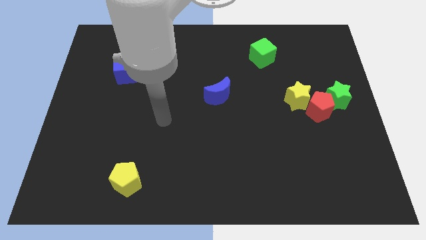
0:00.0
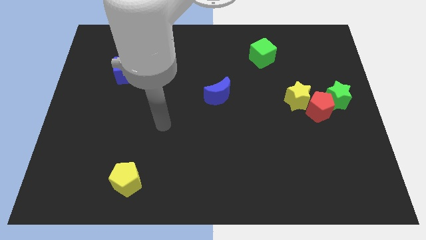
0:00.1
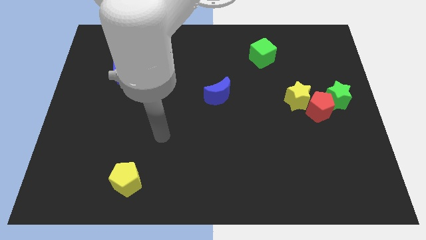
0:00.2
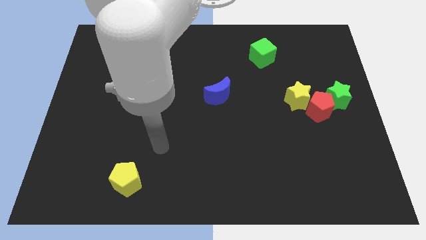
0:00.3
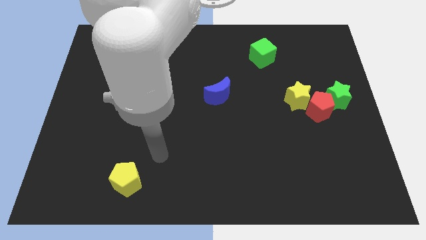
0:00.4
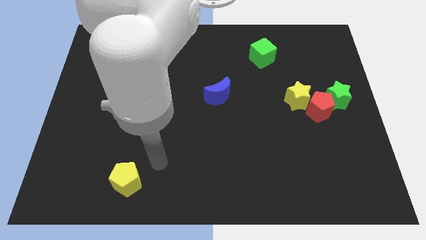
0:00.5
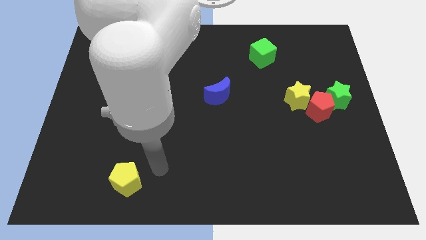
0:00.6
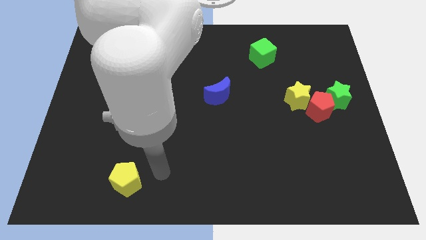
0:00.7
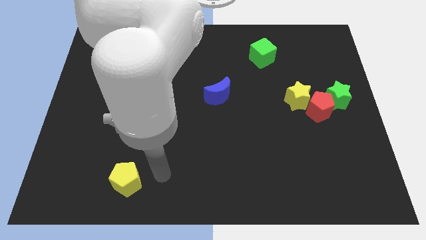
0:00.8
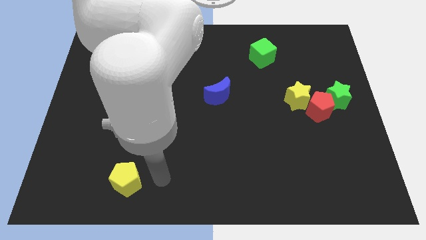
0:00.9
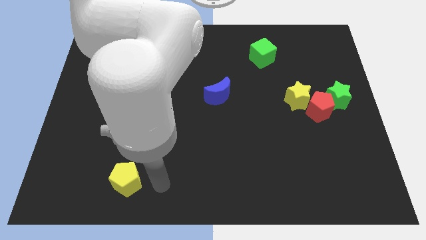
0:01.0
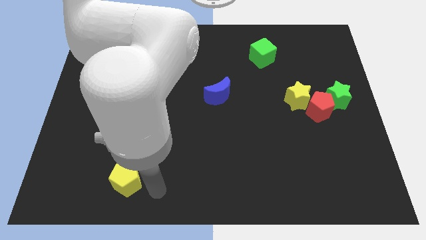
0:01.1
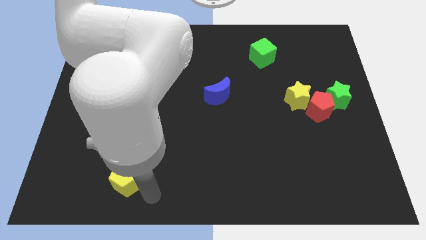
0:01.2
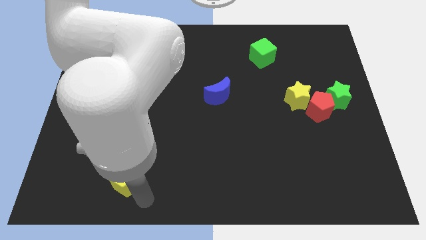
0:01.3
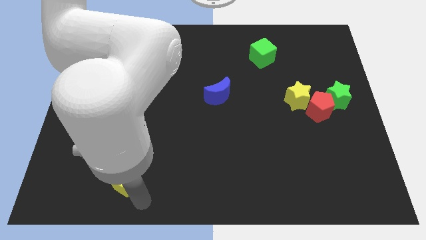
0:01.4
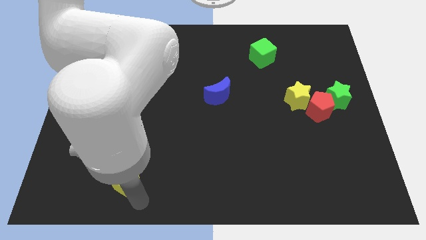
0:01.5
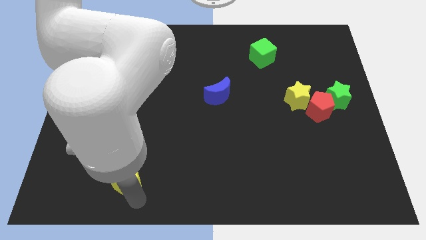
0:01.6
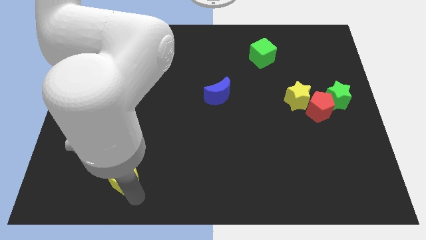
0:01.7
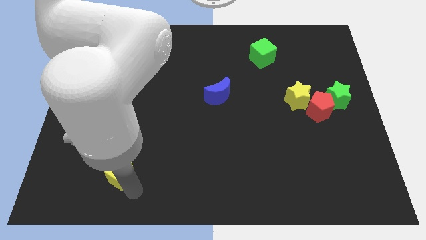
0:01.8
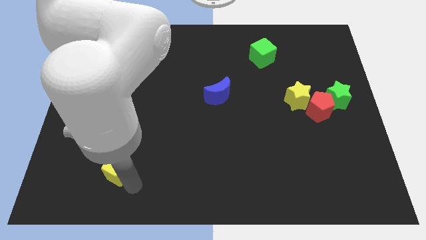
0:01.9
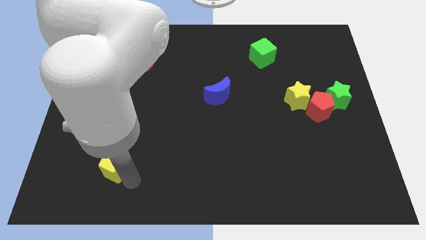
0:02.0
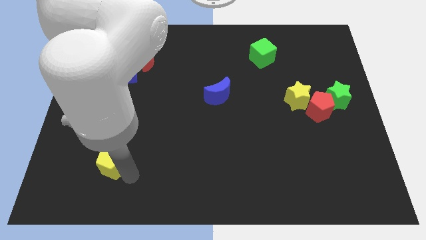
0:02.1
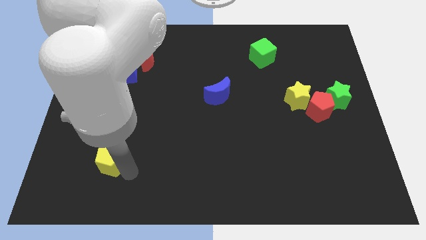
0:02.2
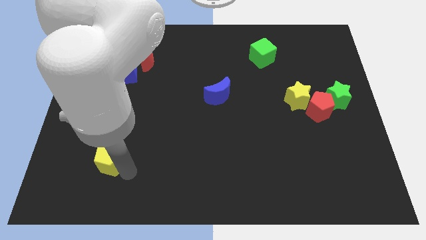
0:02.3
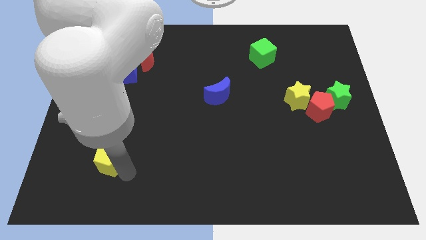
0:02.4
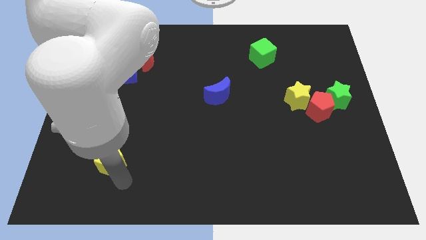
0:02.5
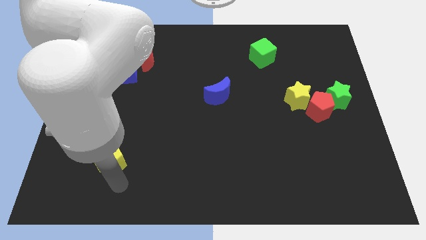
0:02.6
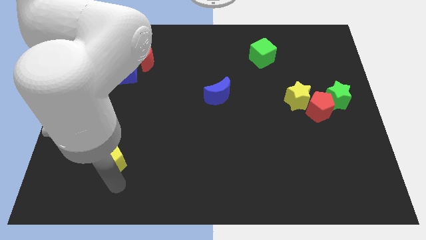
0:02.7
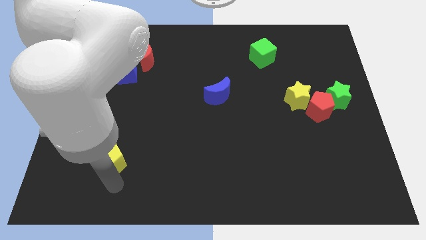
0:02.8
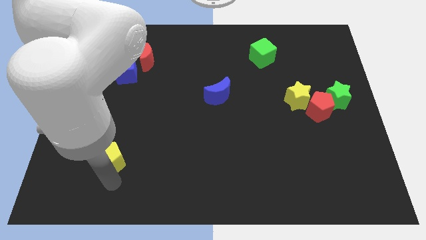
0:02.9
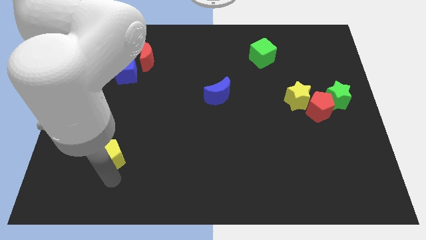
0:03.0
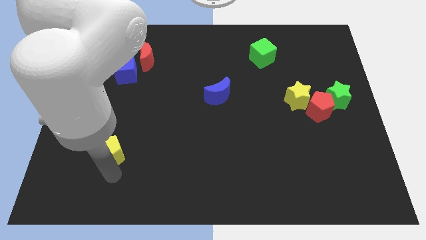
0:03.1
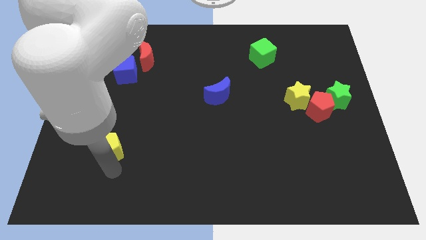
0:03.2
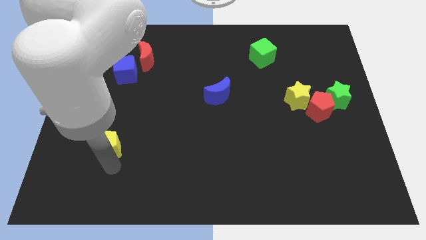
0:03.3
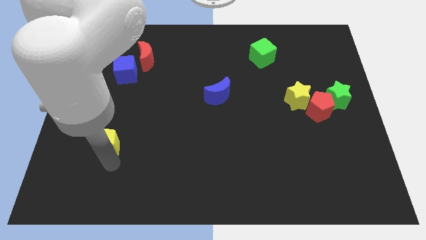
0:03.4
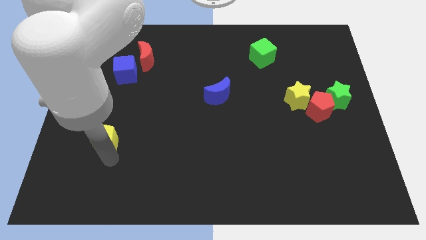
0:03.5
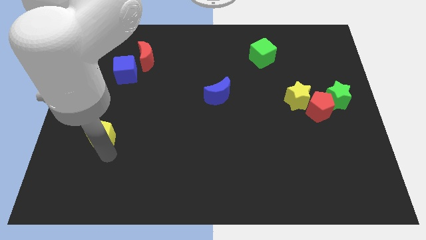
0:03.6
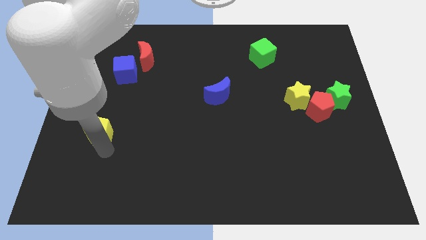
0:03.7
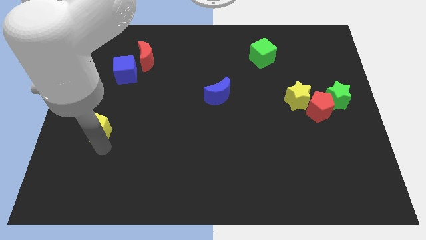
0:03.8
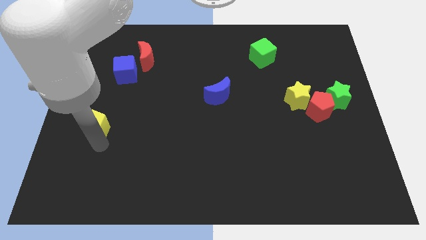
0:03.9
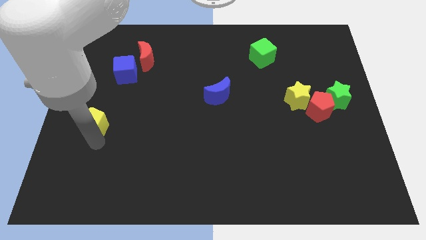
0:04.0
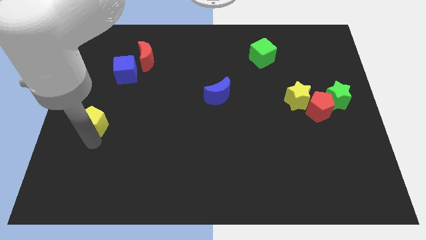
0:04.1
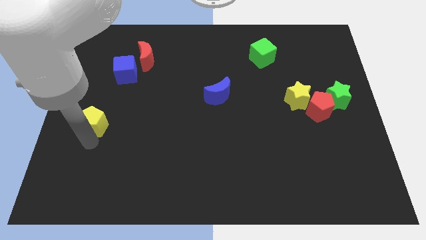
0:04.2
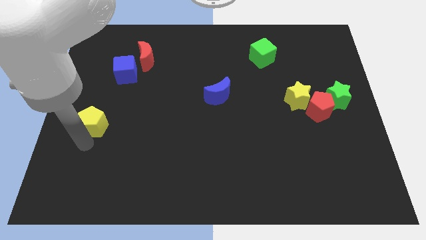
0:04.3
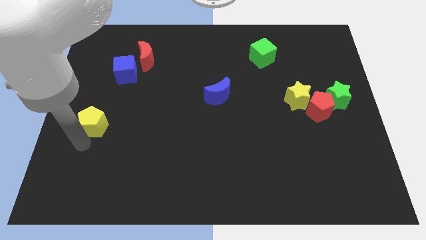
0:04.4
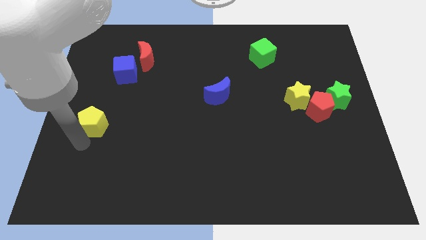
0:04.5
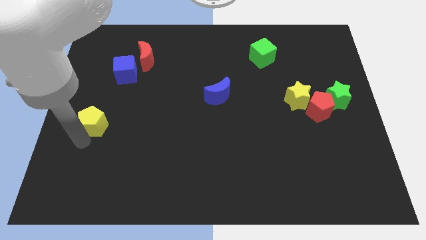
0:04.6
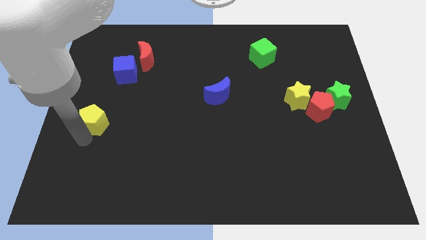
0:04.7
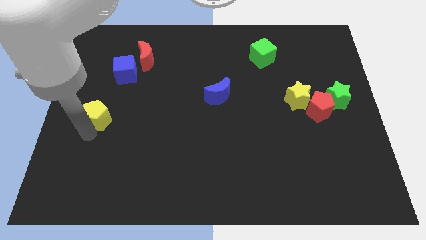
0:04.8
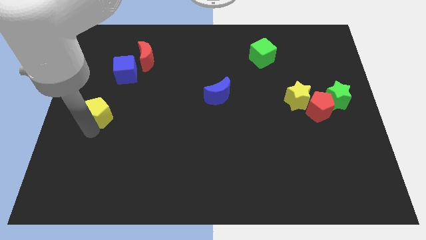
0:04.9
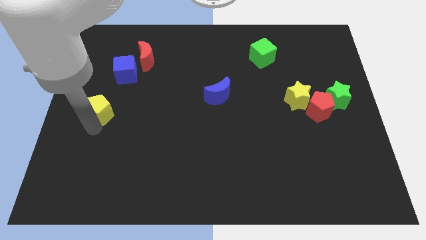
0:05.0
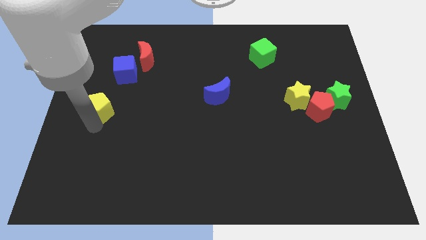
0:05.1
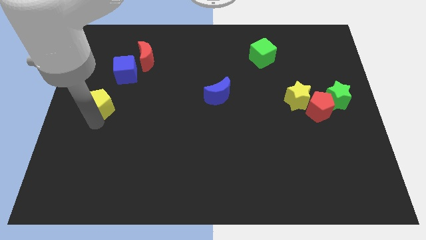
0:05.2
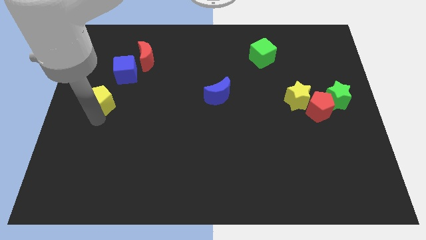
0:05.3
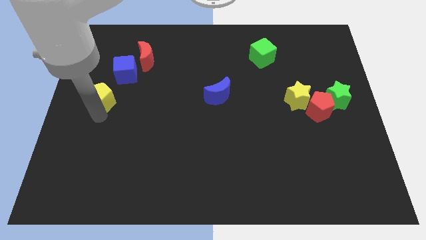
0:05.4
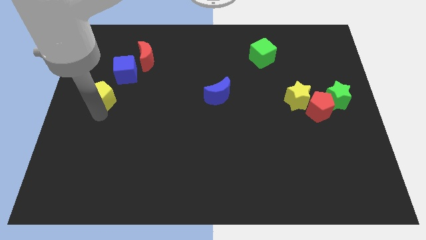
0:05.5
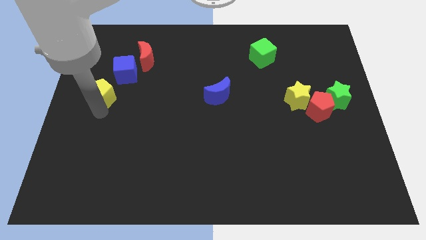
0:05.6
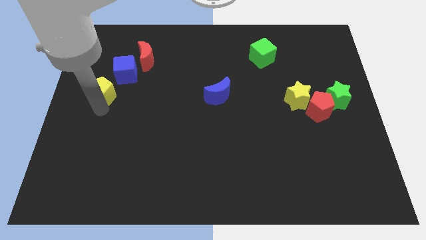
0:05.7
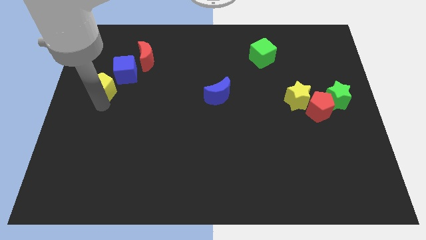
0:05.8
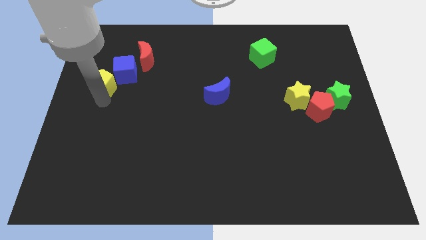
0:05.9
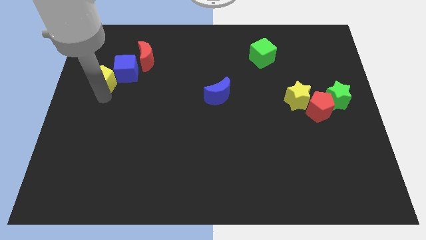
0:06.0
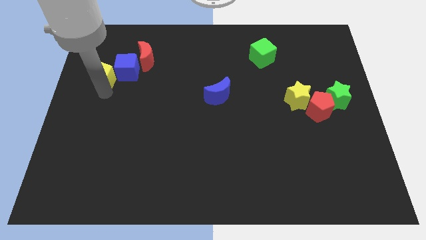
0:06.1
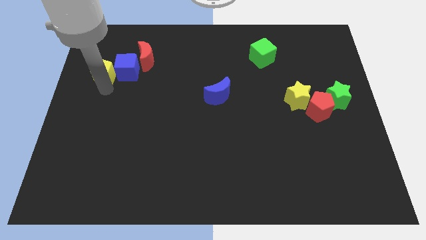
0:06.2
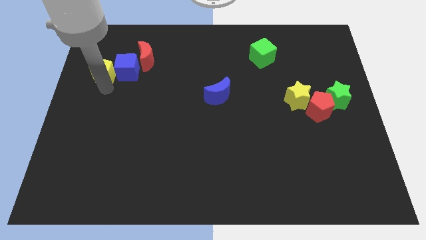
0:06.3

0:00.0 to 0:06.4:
put the yellow pentagon close to the blue cube

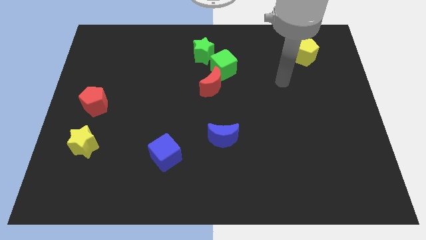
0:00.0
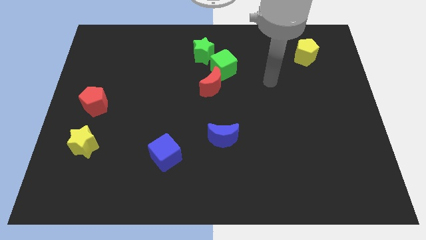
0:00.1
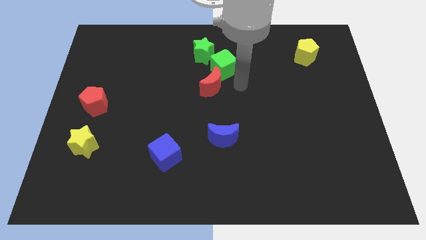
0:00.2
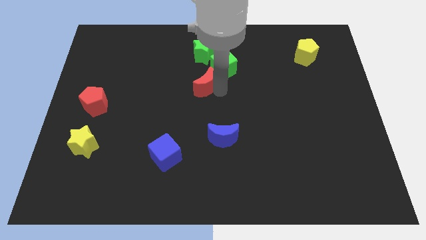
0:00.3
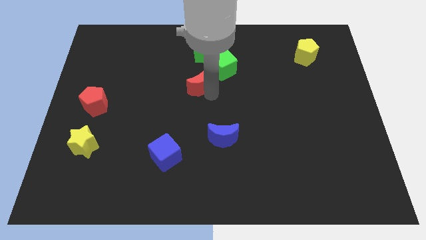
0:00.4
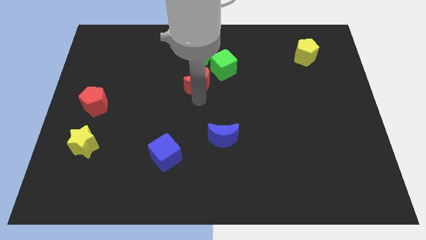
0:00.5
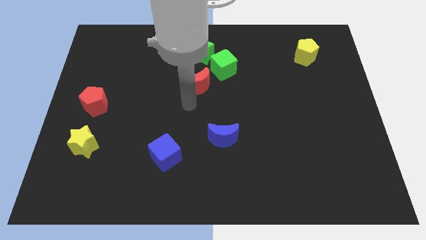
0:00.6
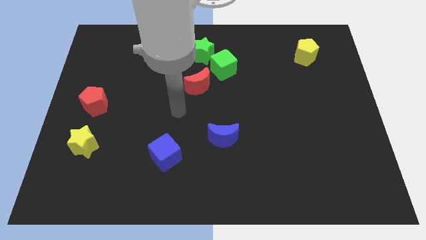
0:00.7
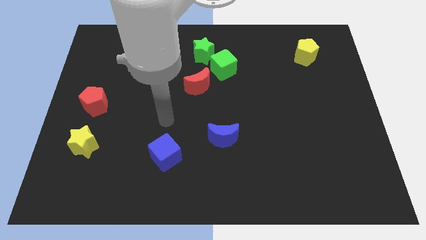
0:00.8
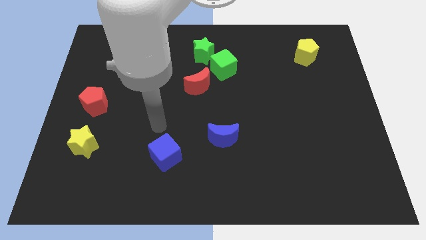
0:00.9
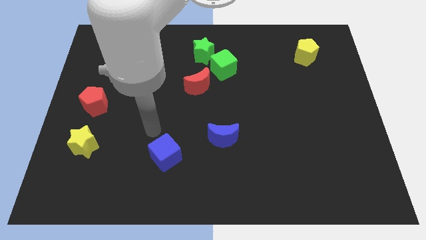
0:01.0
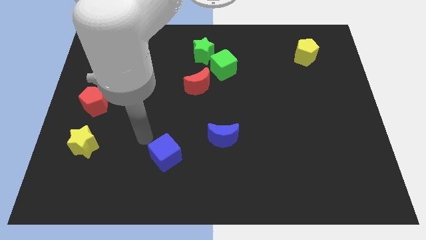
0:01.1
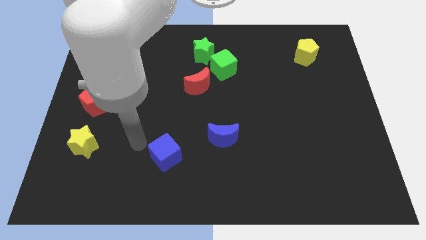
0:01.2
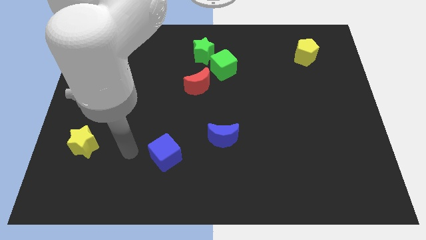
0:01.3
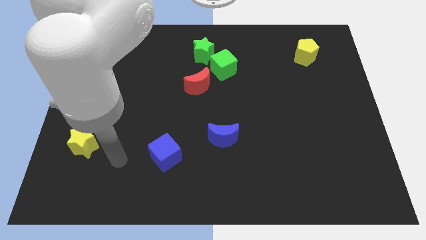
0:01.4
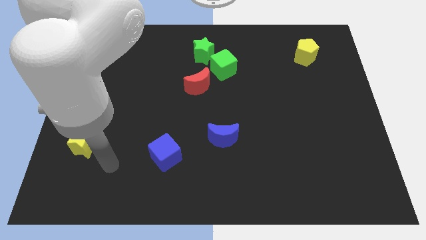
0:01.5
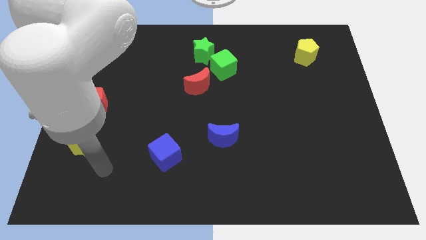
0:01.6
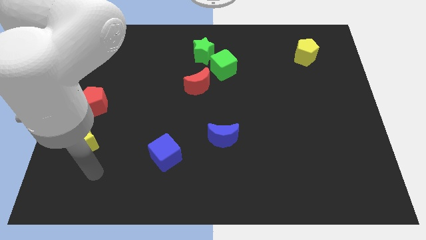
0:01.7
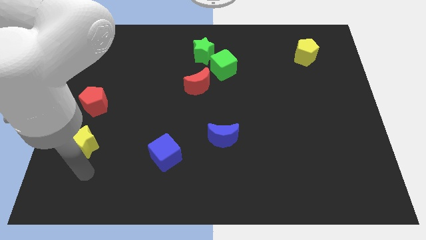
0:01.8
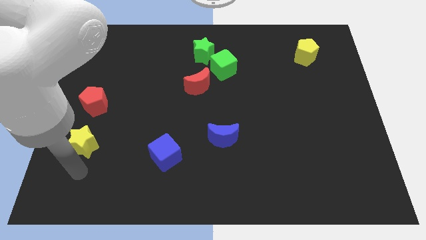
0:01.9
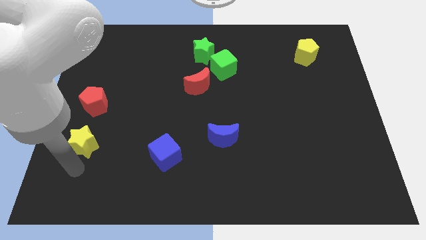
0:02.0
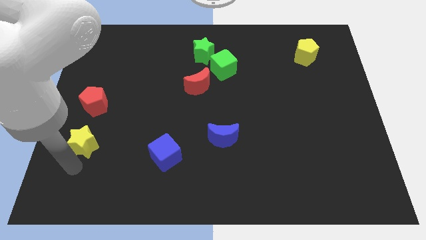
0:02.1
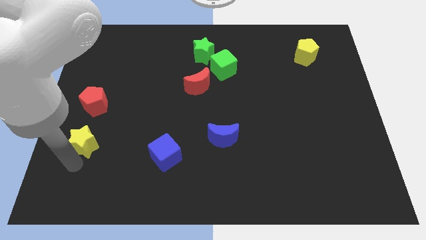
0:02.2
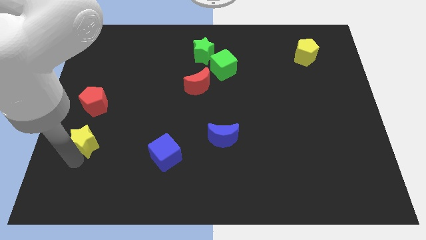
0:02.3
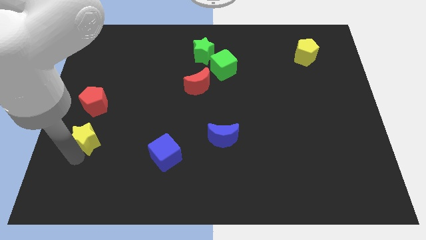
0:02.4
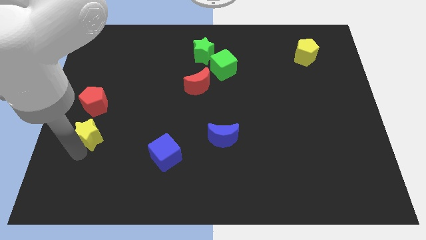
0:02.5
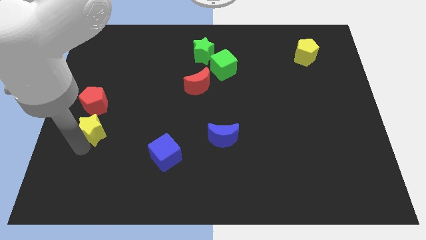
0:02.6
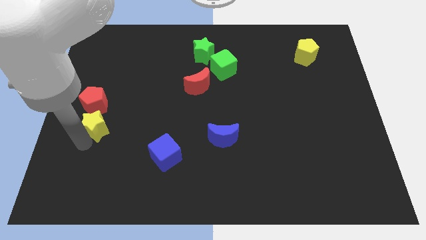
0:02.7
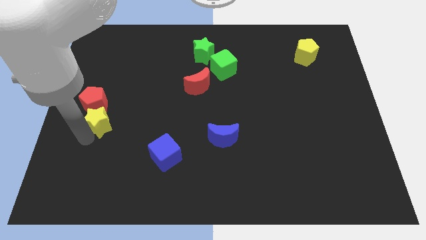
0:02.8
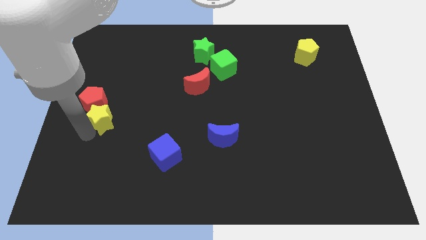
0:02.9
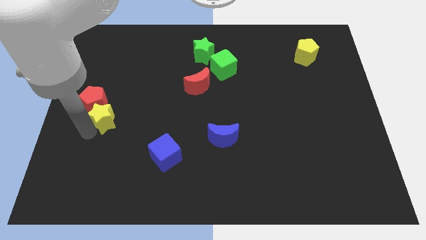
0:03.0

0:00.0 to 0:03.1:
move the yellow star next to the red pentagon
